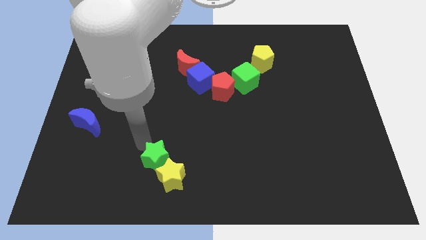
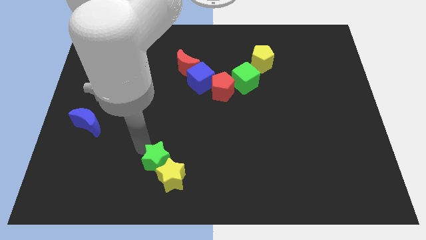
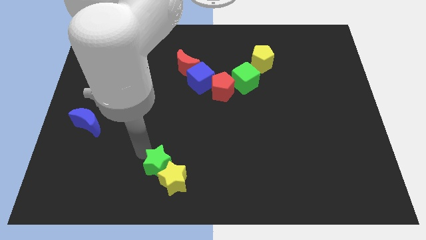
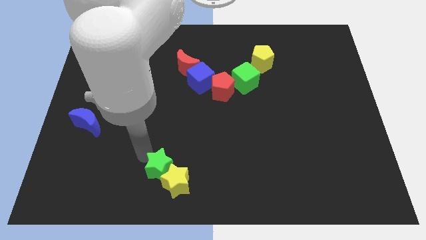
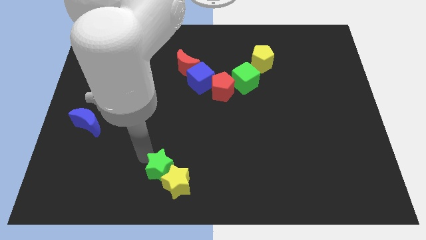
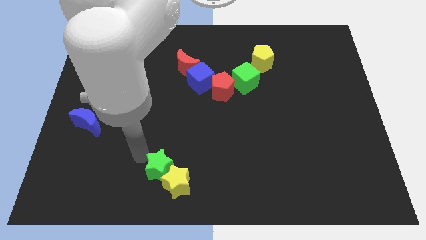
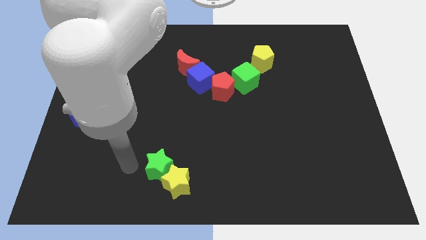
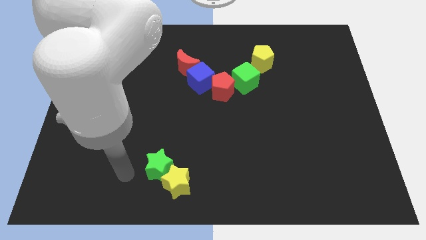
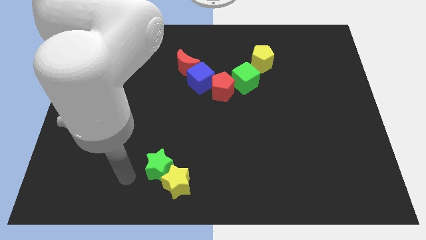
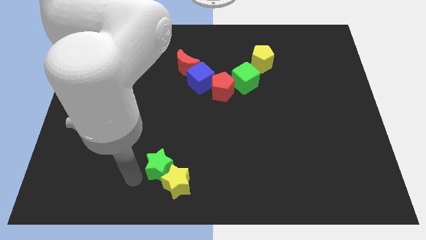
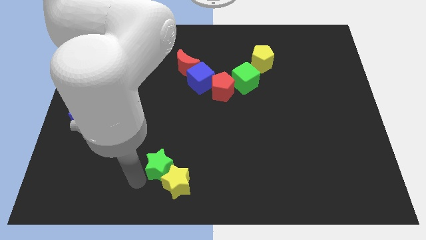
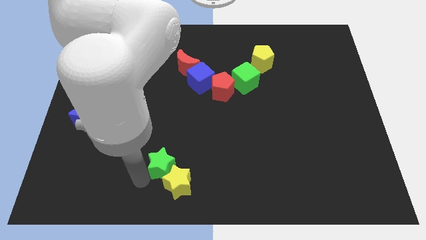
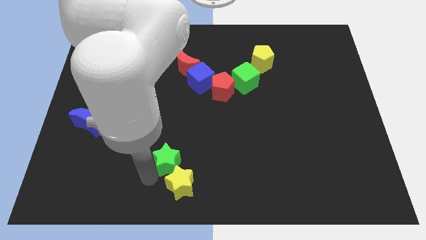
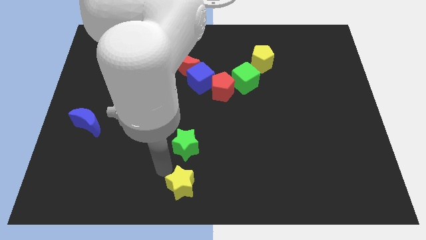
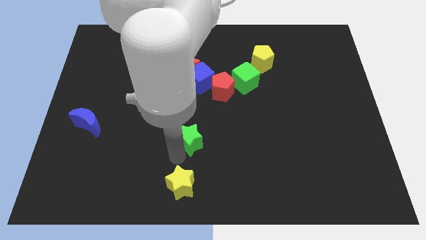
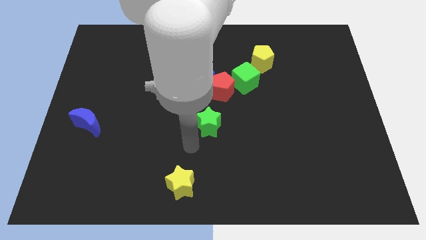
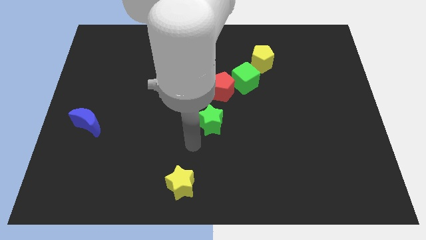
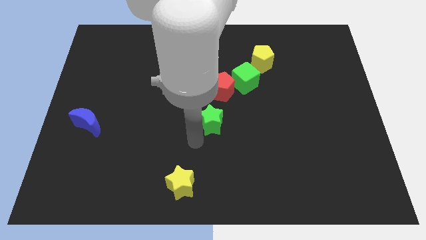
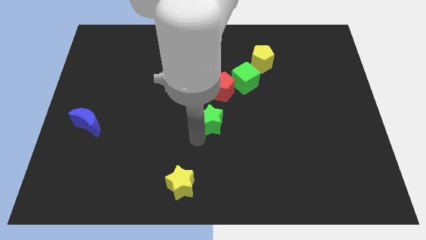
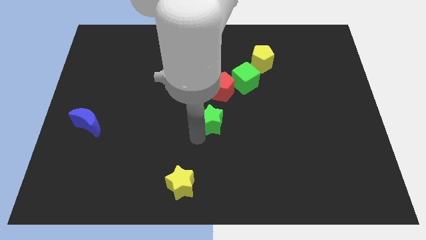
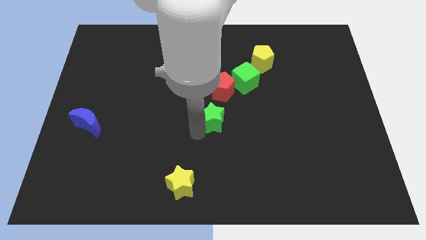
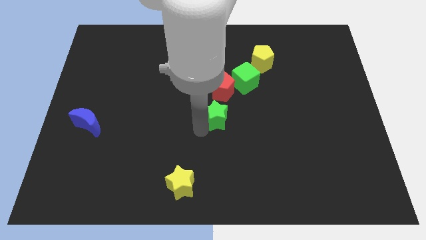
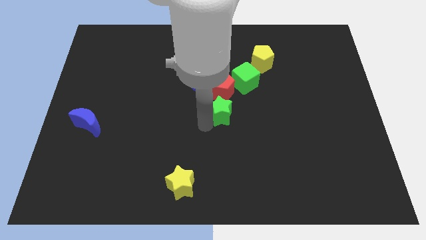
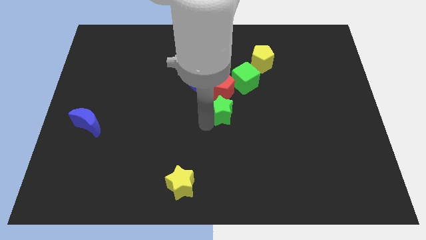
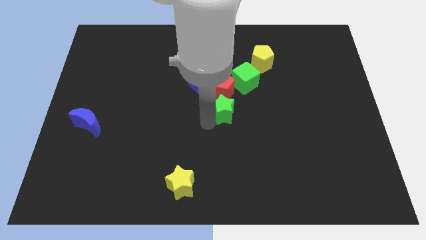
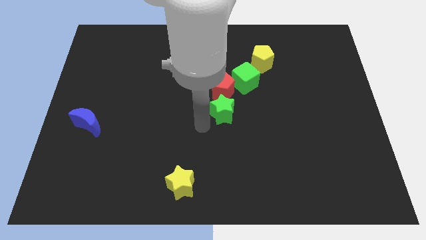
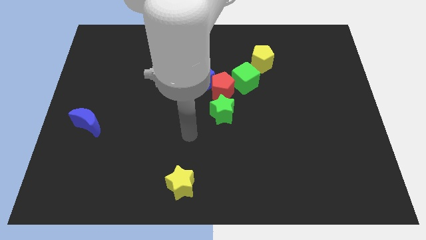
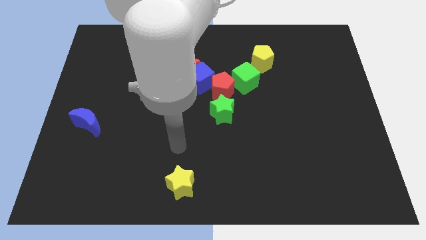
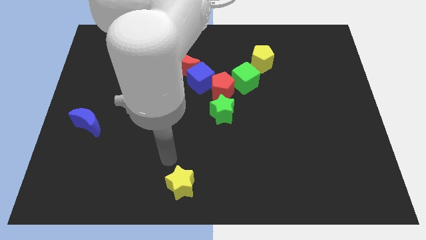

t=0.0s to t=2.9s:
separate the green star and the yellow star

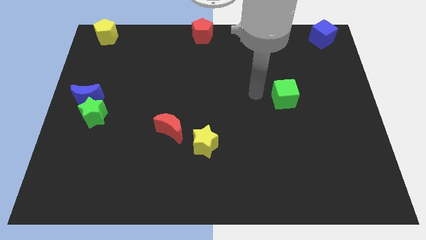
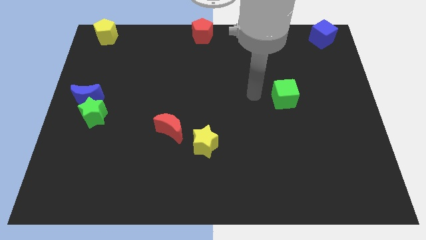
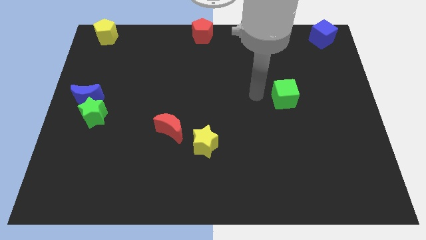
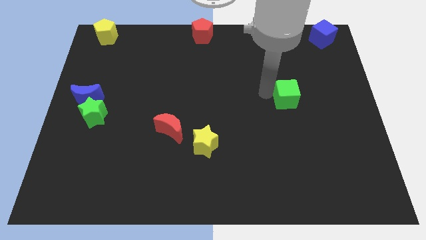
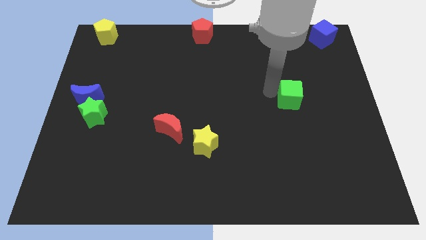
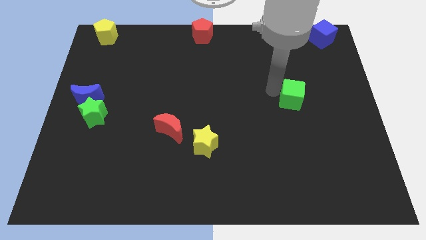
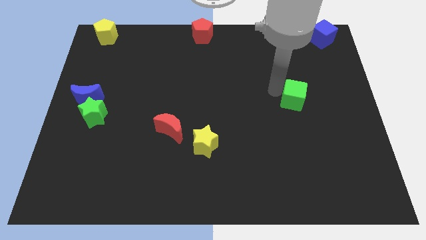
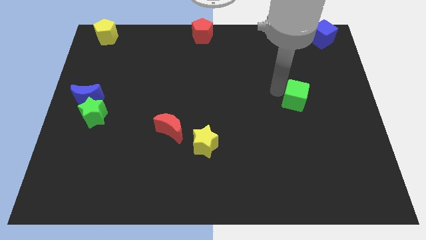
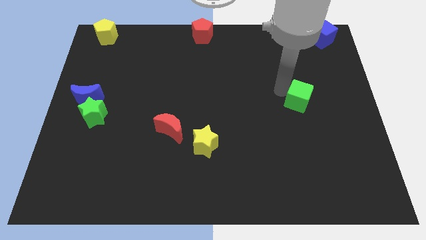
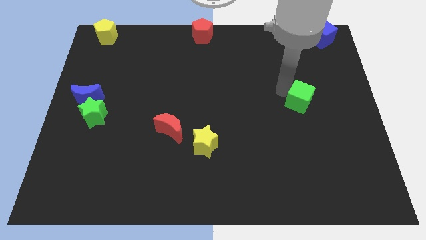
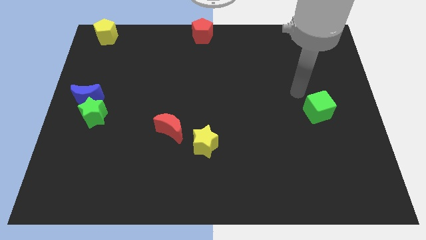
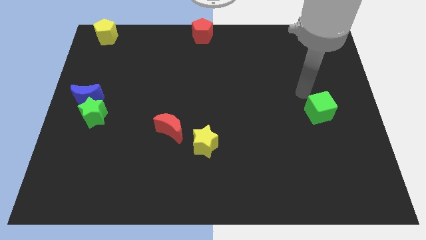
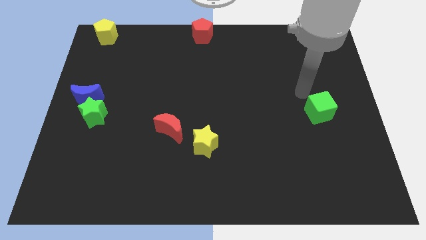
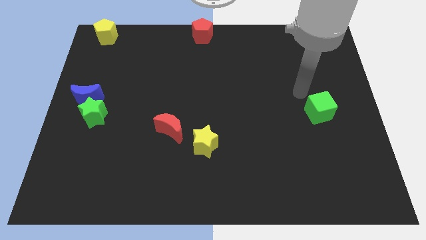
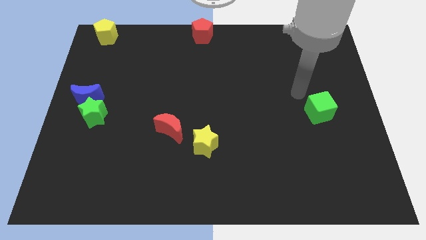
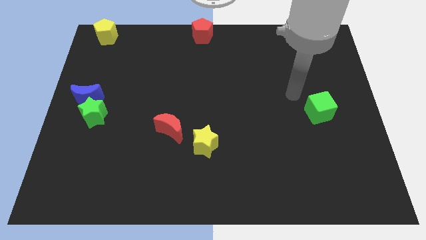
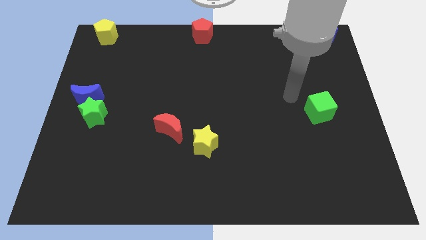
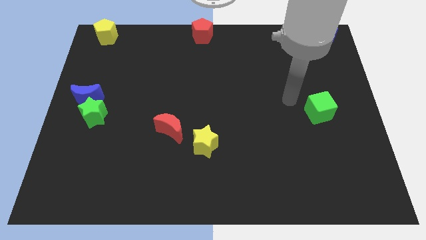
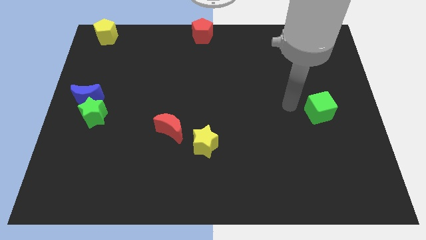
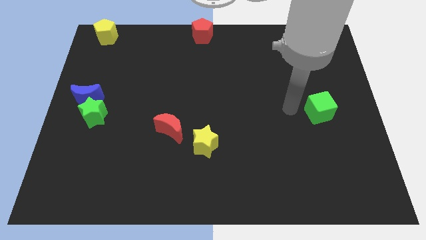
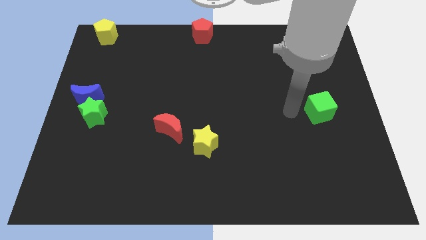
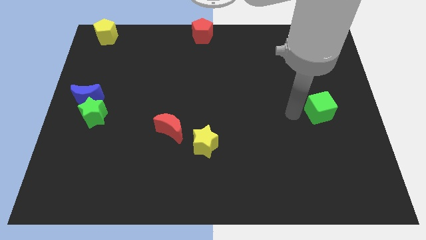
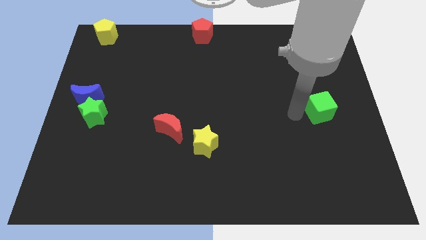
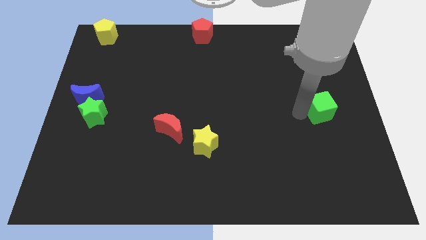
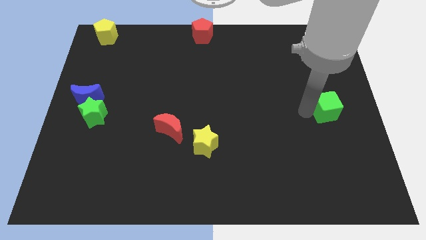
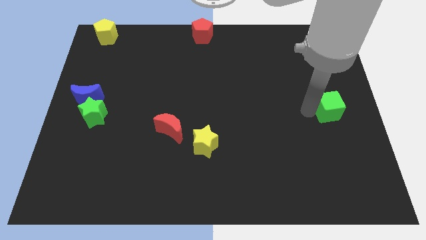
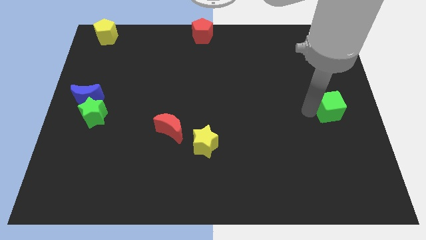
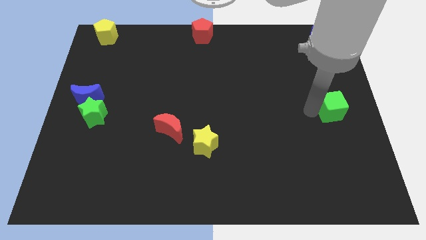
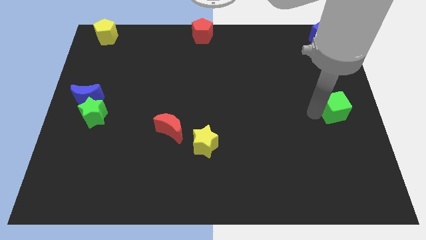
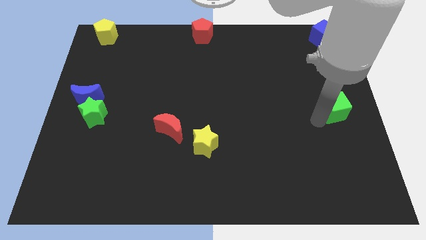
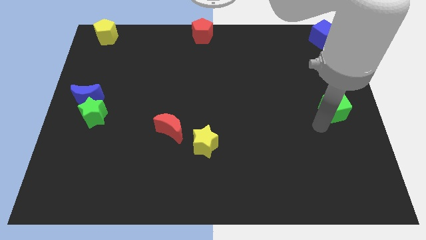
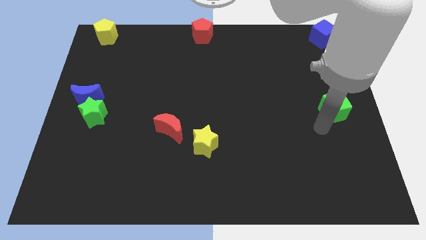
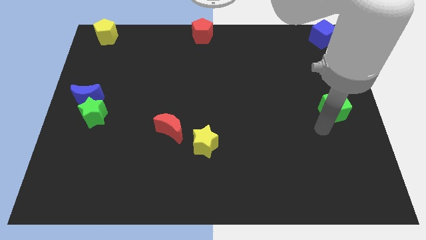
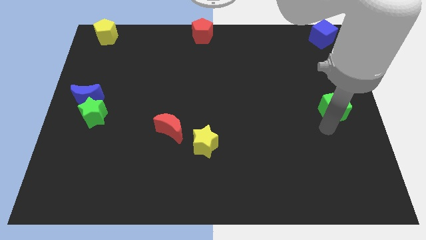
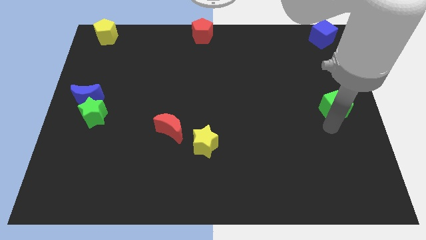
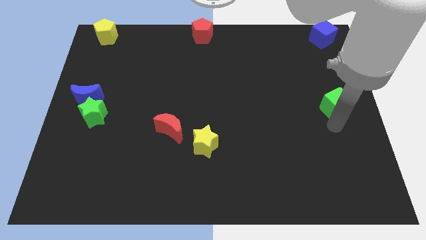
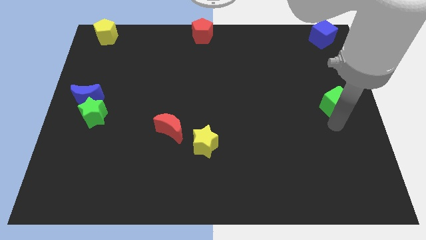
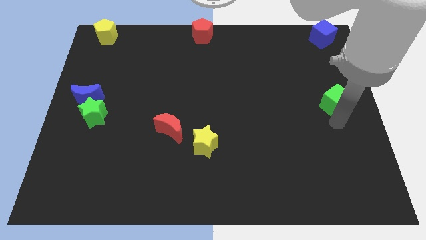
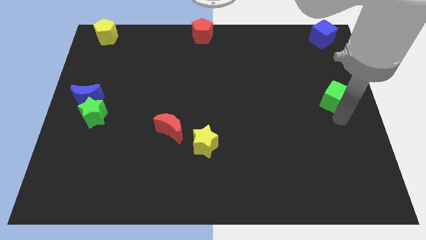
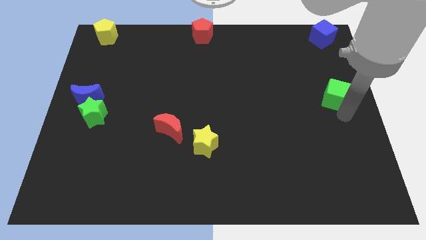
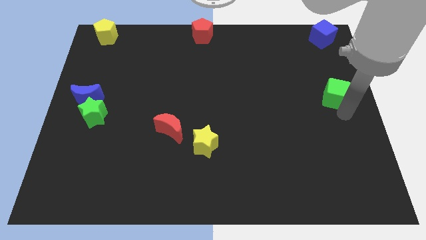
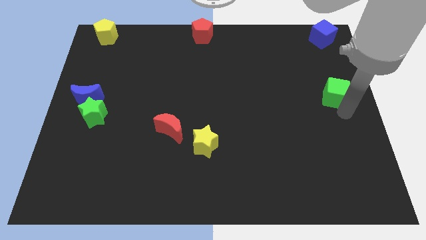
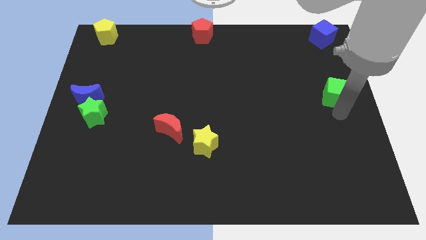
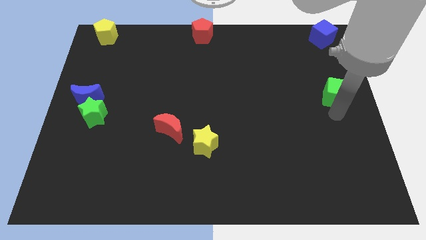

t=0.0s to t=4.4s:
push the green cube vertically to the bottom side of the blue cube

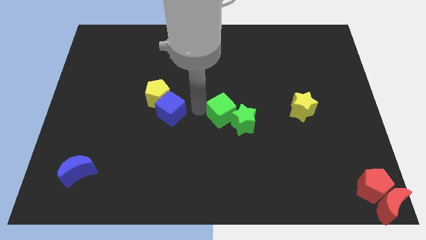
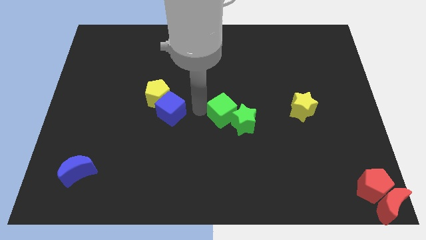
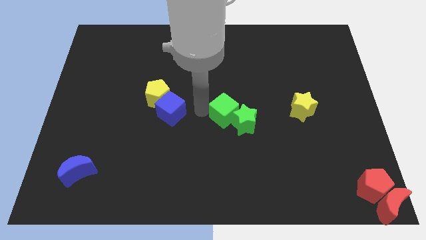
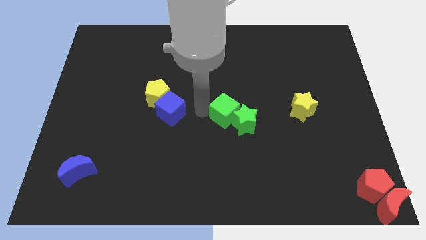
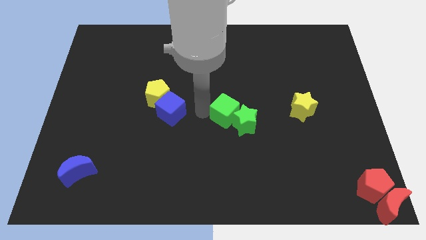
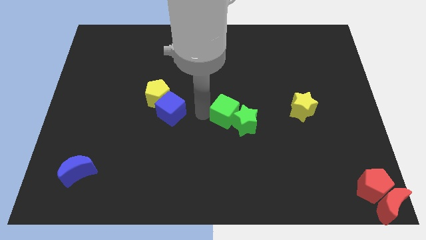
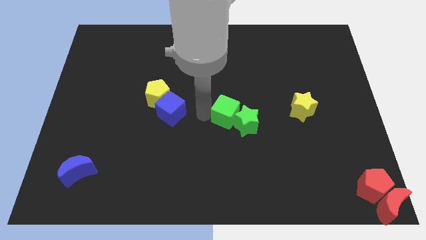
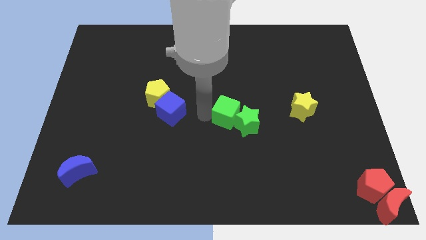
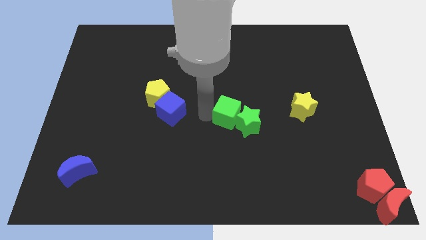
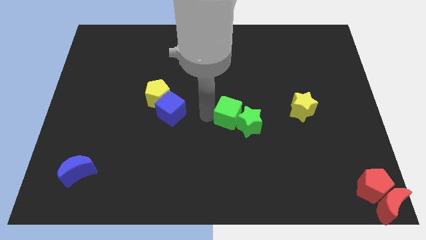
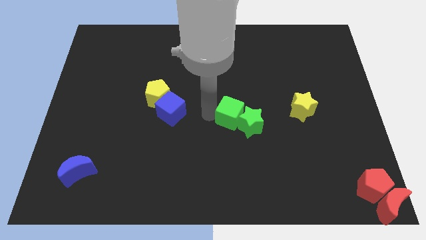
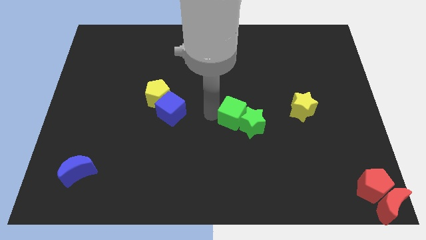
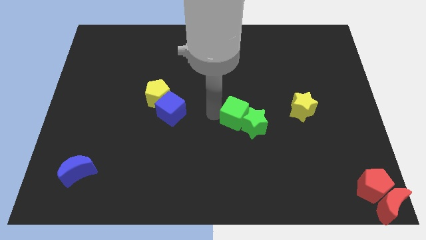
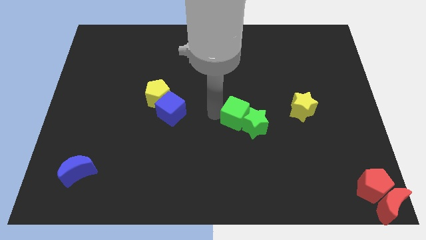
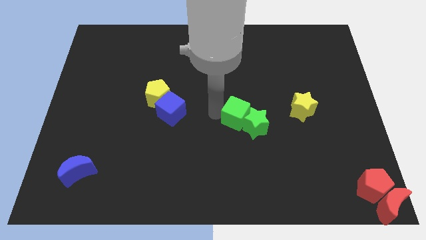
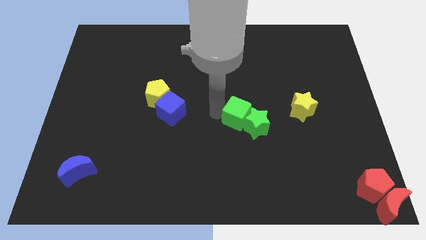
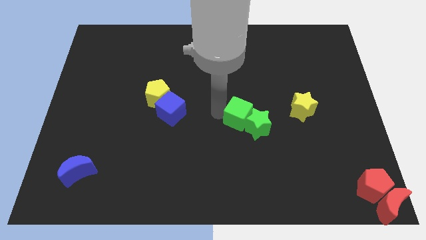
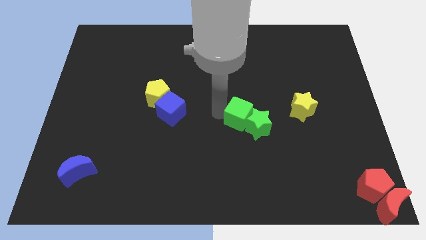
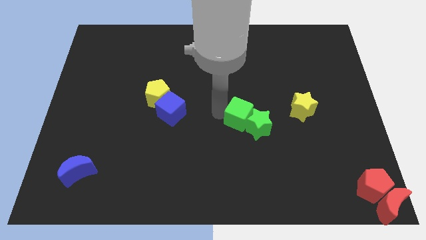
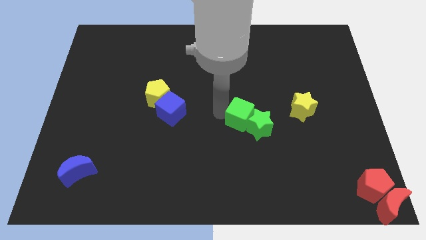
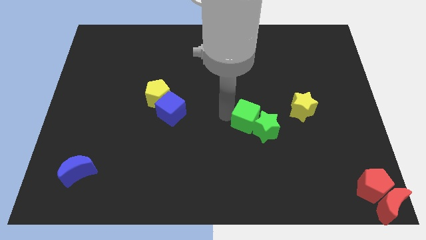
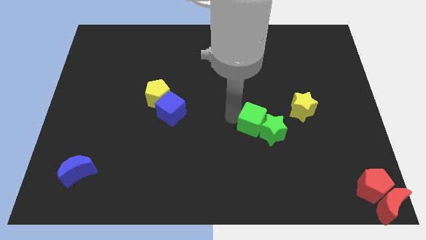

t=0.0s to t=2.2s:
move slightly green cube along green star towards right side
